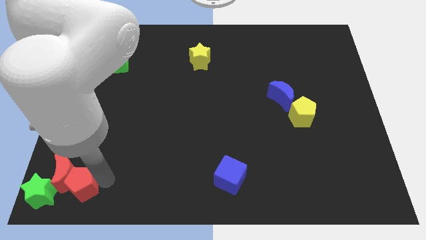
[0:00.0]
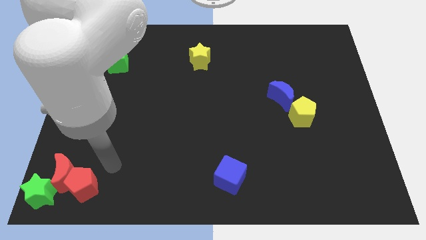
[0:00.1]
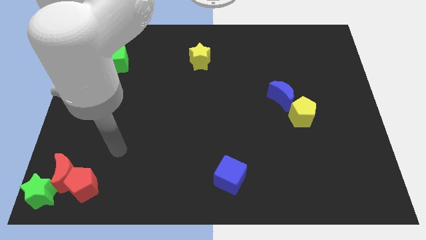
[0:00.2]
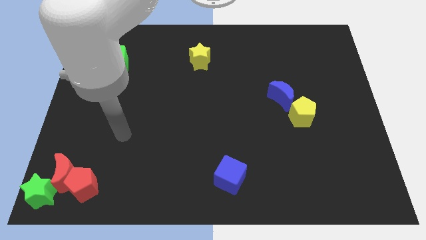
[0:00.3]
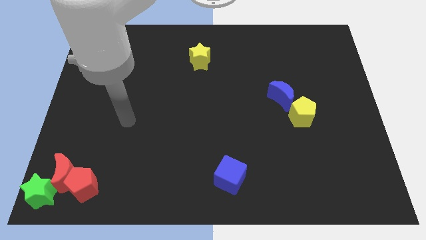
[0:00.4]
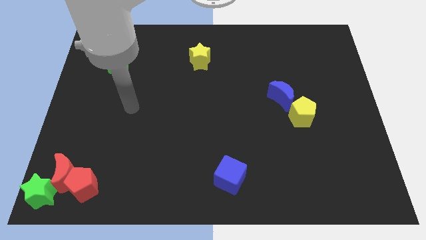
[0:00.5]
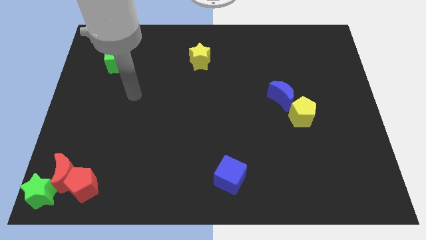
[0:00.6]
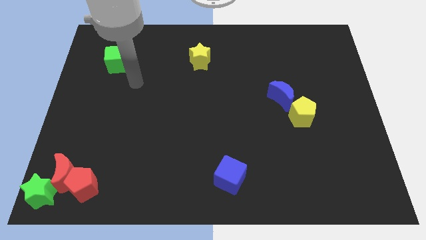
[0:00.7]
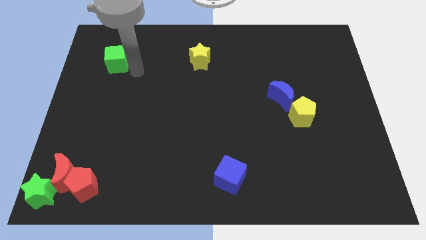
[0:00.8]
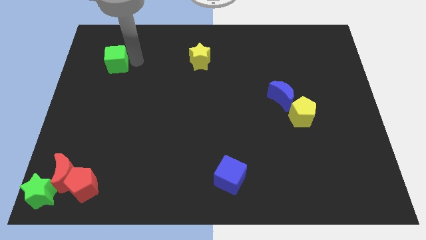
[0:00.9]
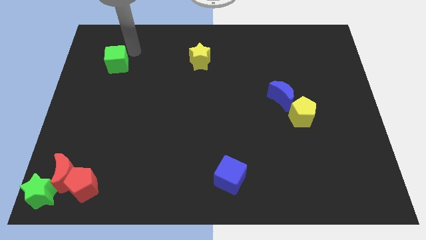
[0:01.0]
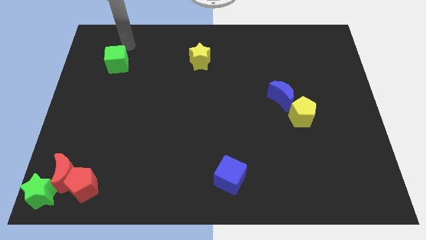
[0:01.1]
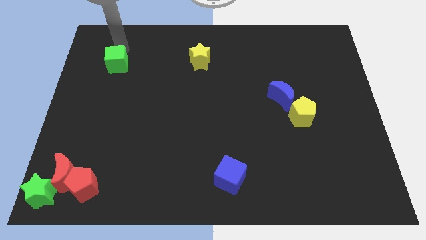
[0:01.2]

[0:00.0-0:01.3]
place your arm to the top of green cube

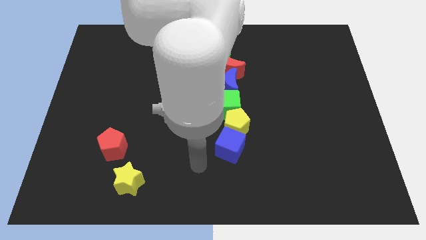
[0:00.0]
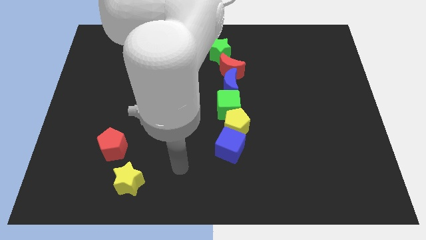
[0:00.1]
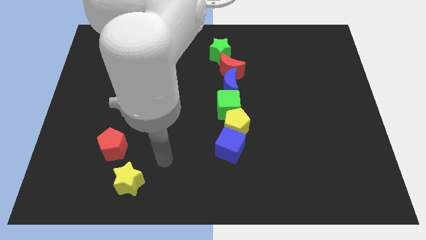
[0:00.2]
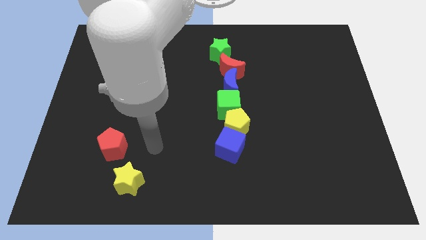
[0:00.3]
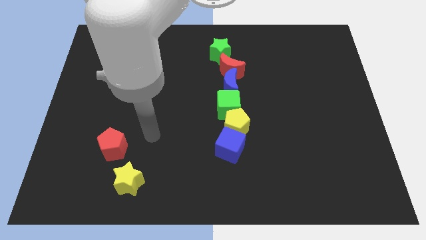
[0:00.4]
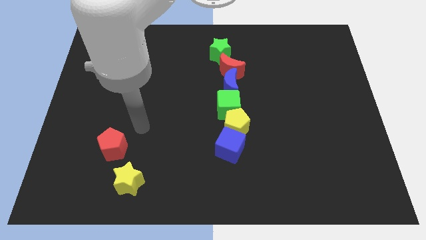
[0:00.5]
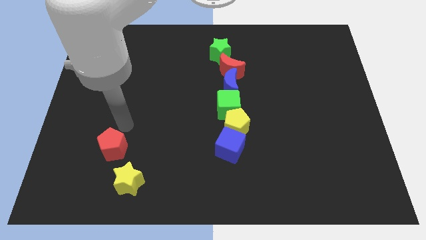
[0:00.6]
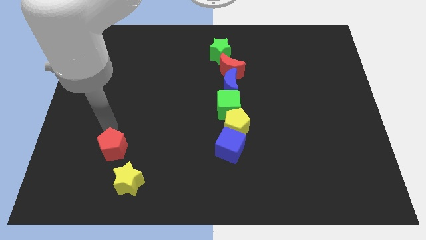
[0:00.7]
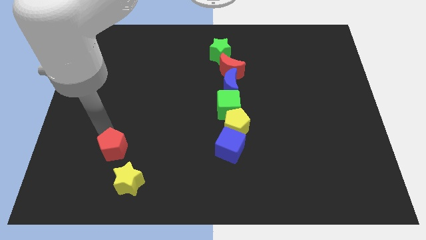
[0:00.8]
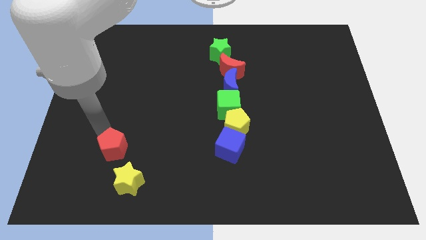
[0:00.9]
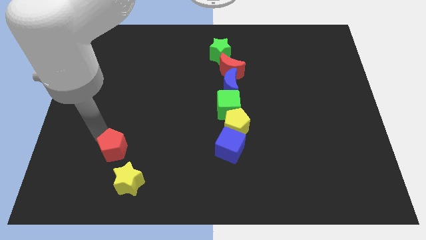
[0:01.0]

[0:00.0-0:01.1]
point on the top left side of red pentagon

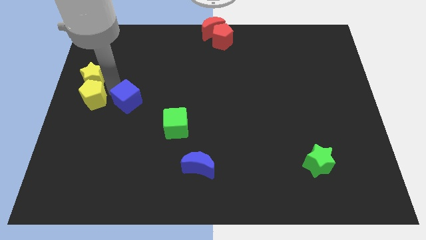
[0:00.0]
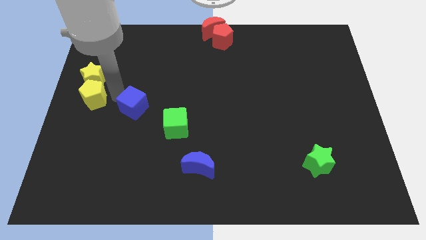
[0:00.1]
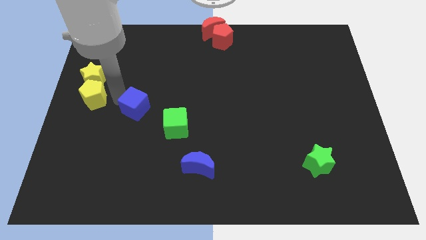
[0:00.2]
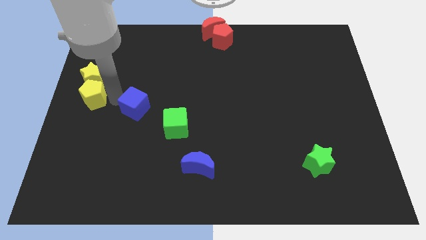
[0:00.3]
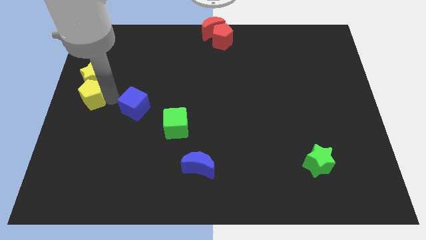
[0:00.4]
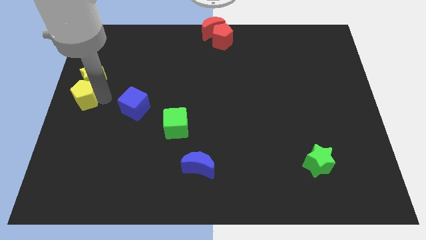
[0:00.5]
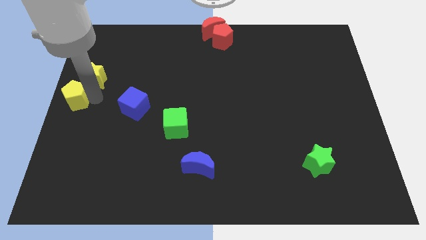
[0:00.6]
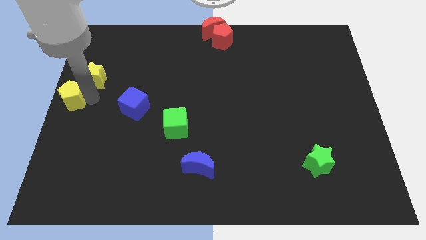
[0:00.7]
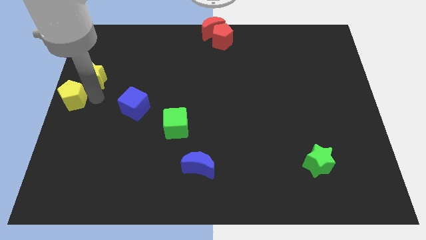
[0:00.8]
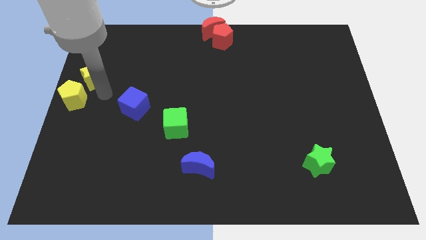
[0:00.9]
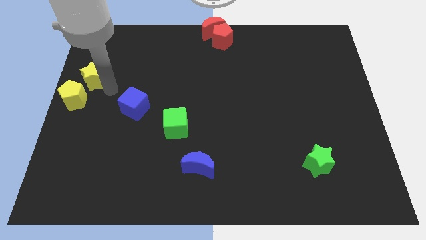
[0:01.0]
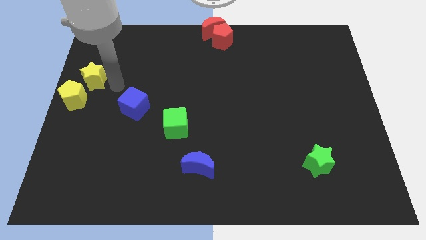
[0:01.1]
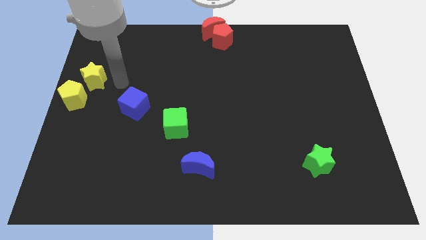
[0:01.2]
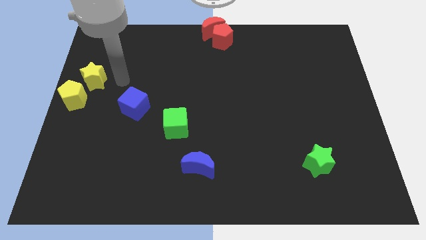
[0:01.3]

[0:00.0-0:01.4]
reposition blue cube and yellow pentagon

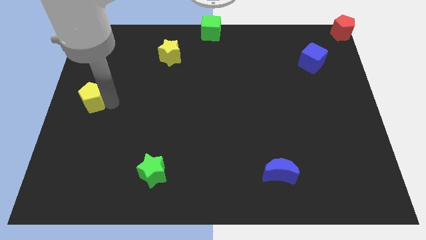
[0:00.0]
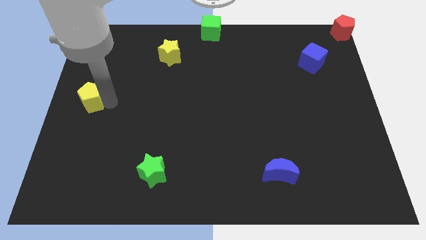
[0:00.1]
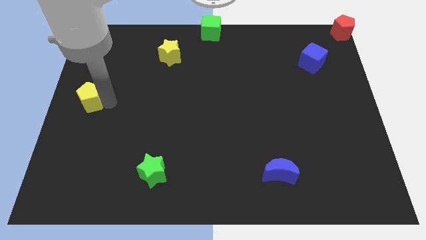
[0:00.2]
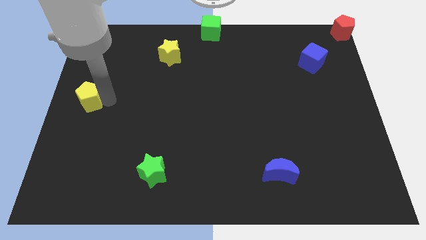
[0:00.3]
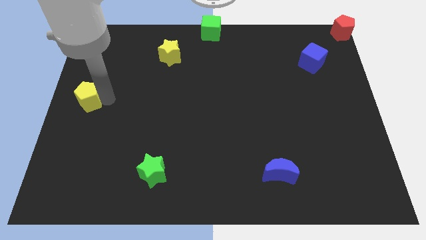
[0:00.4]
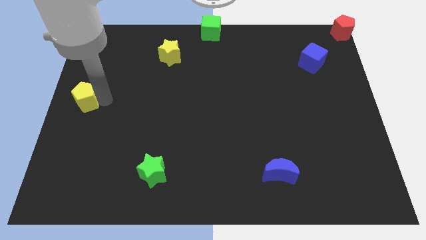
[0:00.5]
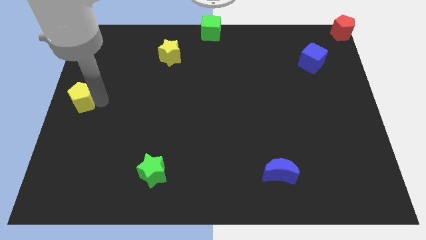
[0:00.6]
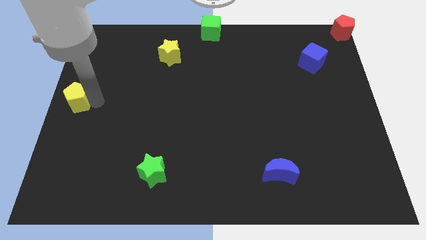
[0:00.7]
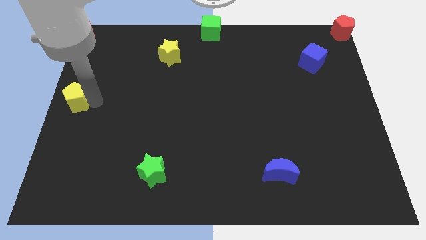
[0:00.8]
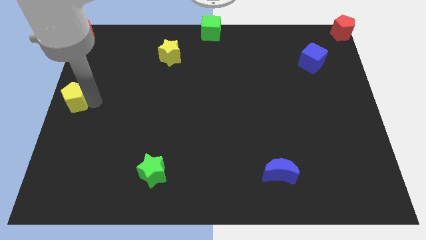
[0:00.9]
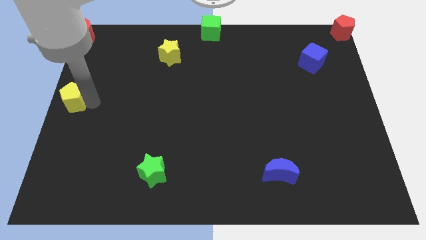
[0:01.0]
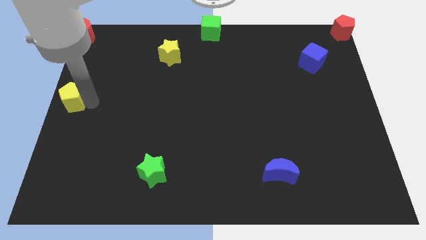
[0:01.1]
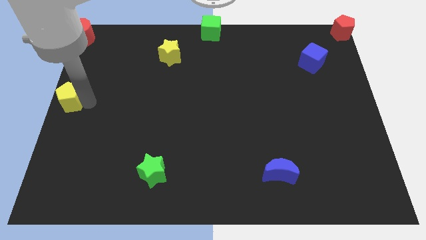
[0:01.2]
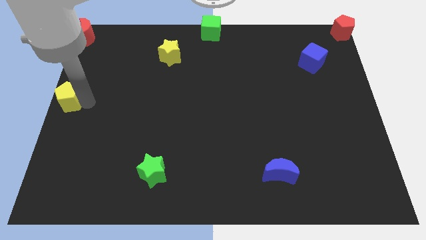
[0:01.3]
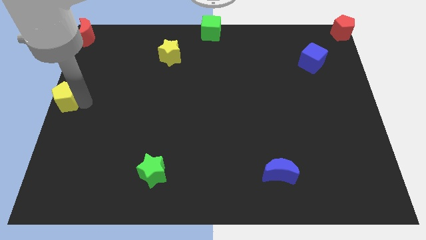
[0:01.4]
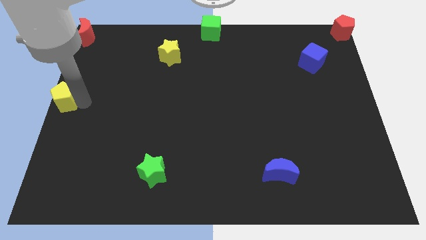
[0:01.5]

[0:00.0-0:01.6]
place yellow pentagon towards left end

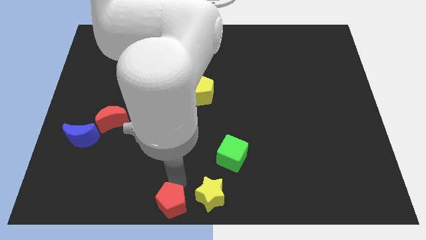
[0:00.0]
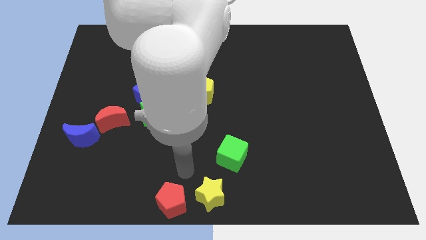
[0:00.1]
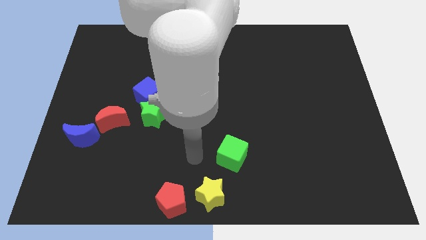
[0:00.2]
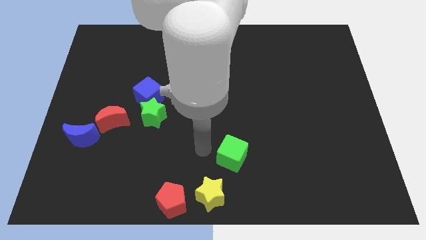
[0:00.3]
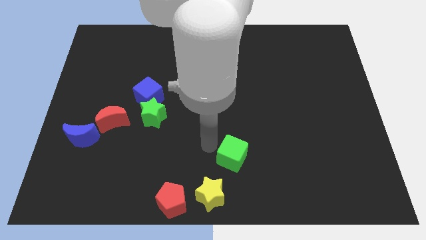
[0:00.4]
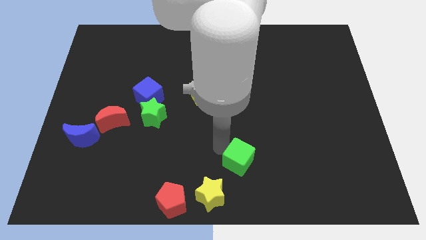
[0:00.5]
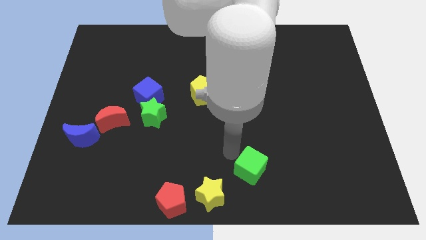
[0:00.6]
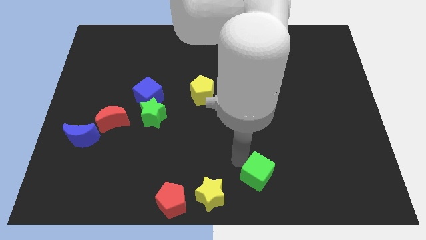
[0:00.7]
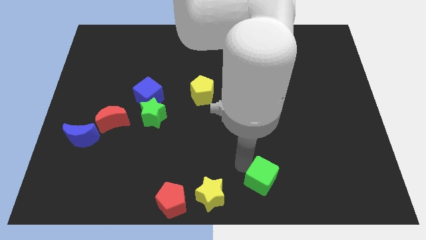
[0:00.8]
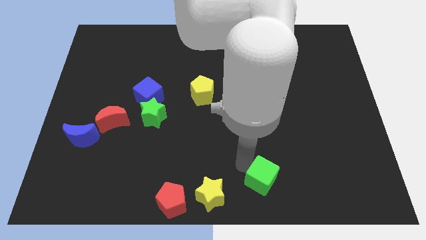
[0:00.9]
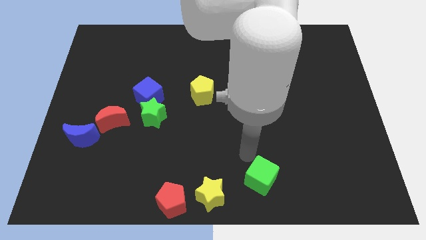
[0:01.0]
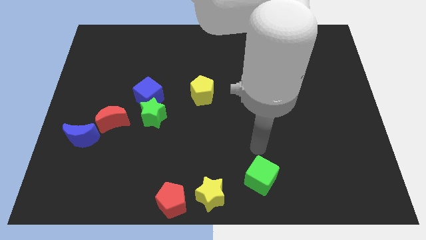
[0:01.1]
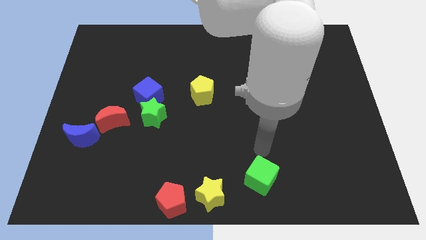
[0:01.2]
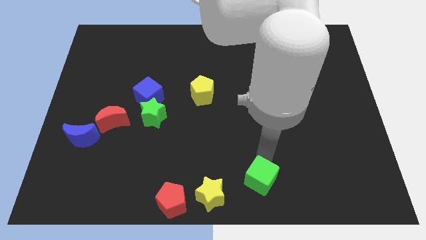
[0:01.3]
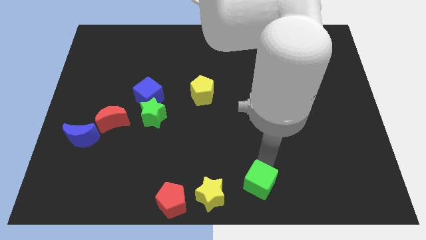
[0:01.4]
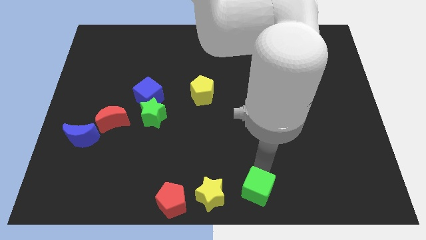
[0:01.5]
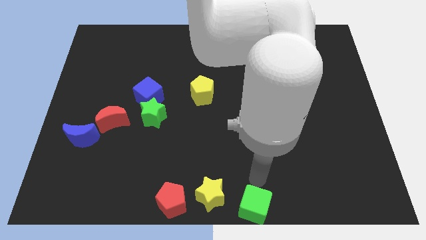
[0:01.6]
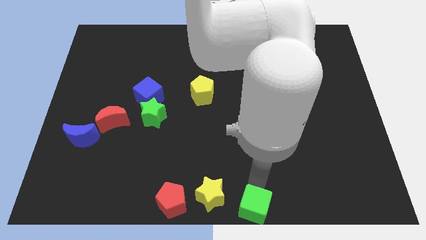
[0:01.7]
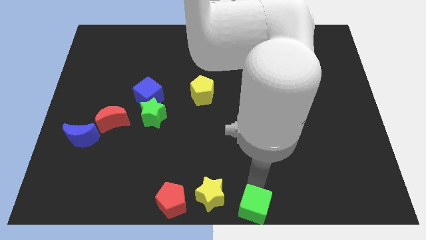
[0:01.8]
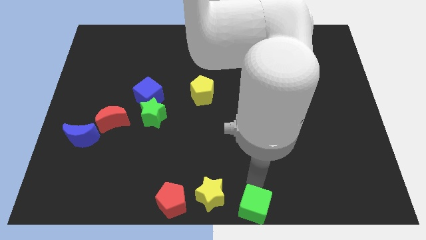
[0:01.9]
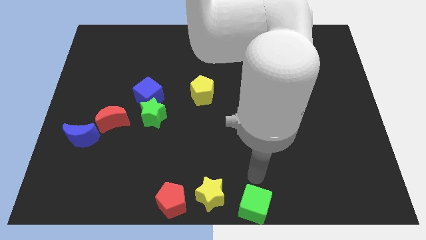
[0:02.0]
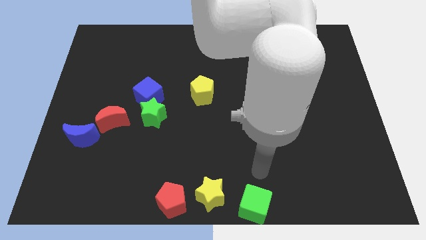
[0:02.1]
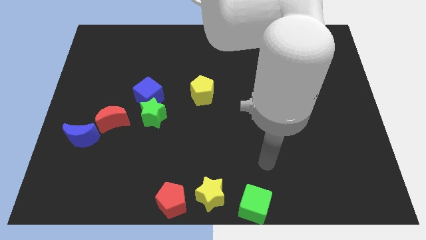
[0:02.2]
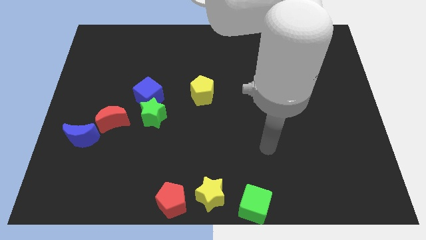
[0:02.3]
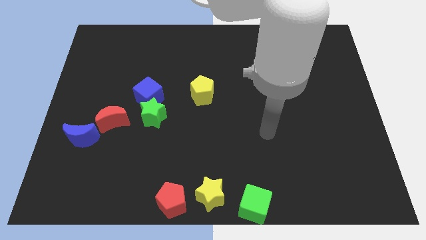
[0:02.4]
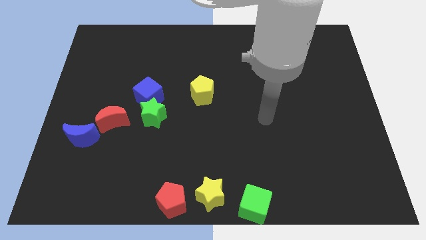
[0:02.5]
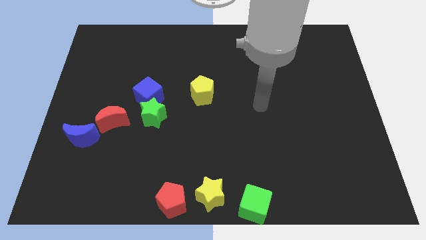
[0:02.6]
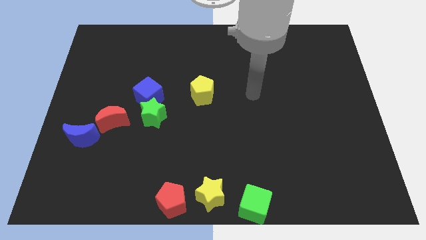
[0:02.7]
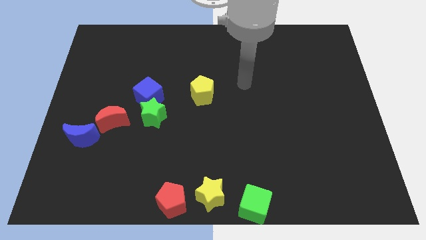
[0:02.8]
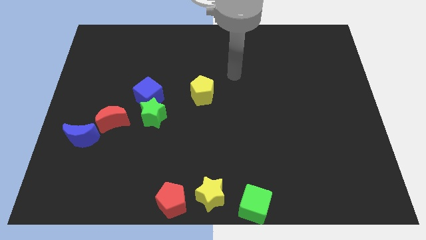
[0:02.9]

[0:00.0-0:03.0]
place the green cube to the bottom center of board

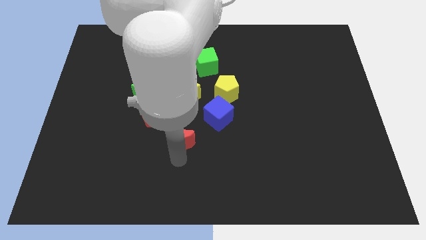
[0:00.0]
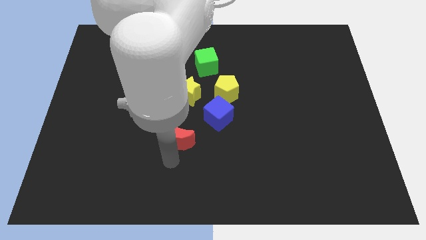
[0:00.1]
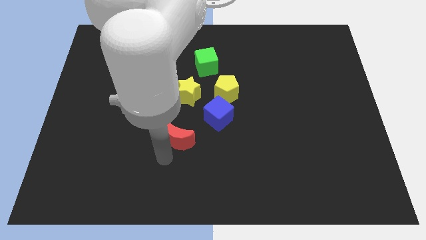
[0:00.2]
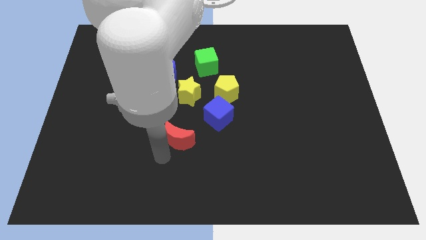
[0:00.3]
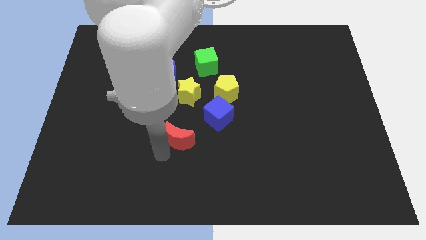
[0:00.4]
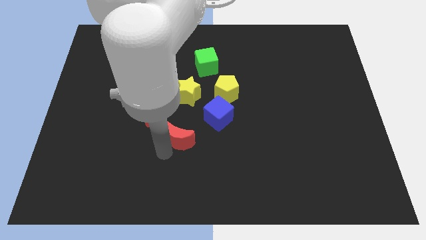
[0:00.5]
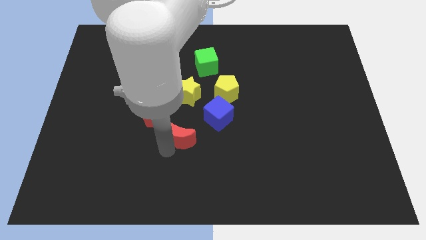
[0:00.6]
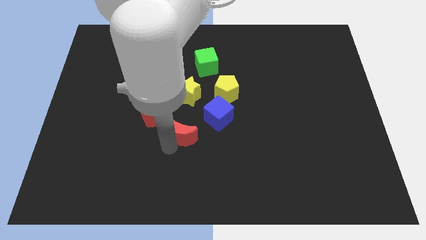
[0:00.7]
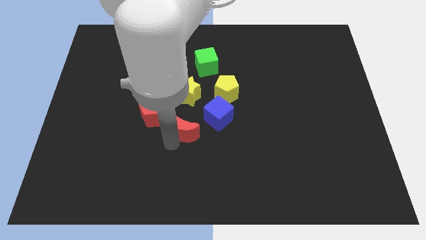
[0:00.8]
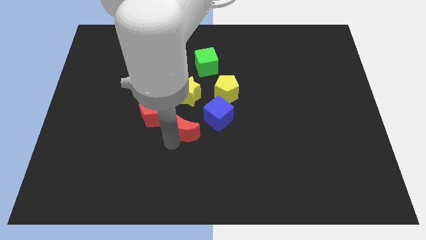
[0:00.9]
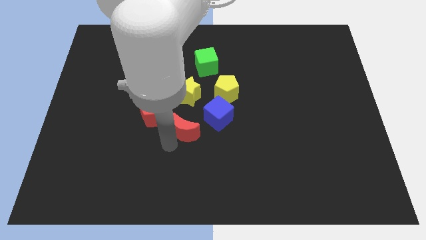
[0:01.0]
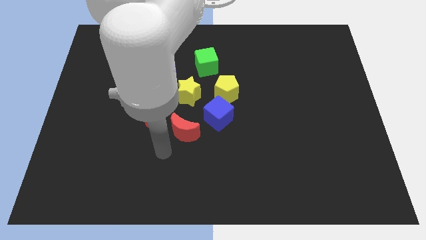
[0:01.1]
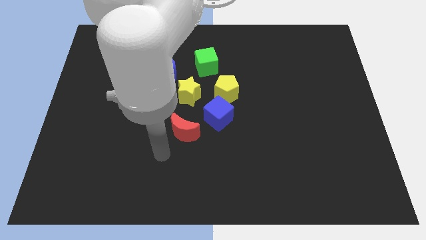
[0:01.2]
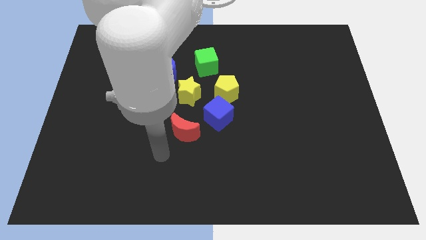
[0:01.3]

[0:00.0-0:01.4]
push the red moon towards the center of the board
